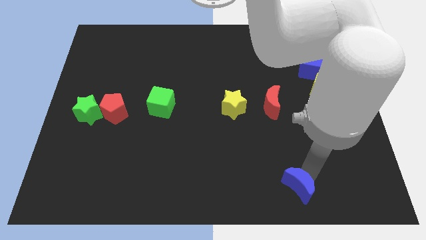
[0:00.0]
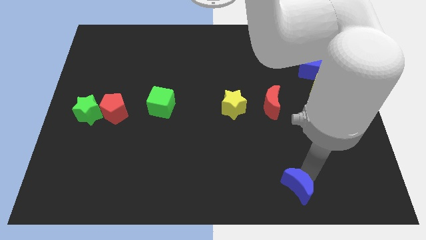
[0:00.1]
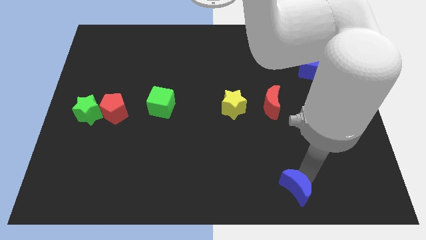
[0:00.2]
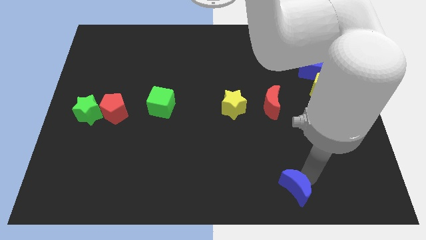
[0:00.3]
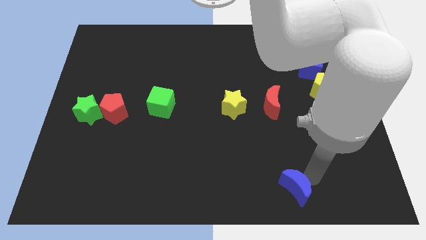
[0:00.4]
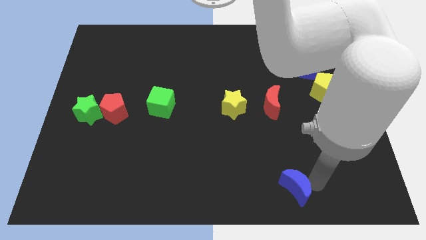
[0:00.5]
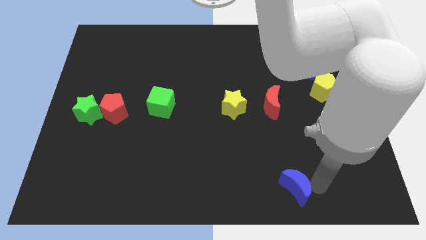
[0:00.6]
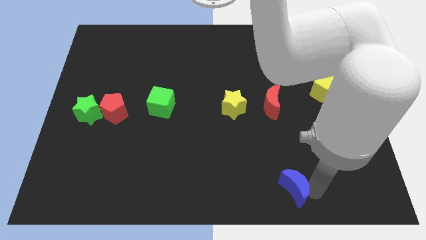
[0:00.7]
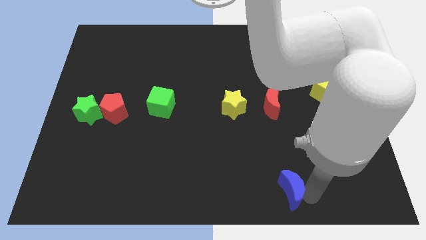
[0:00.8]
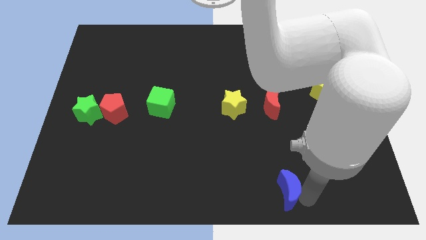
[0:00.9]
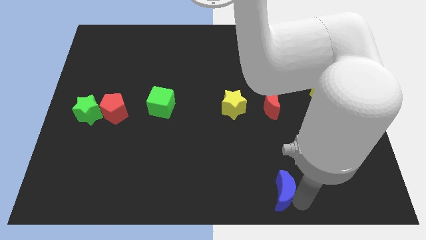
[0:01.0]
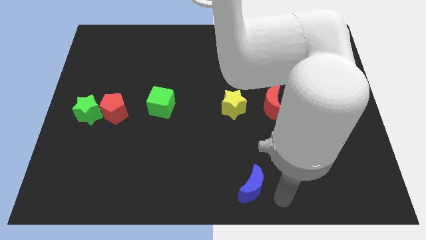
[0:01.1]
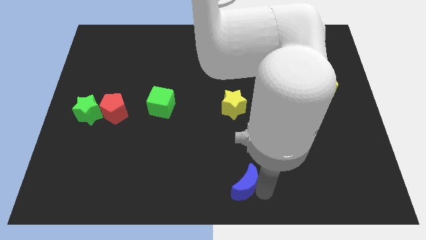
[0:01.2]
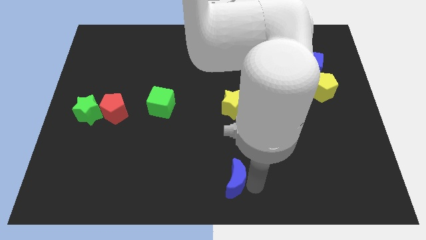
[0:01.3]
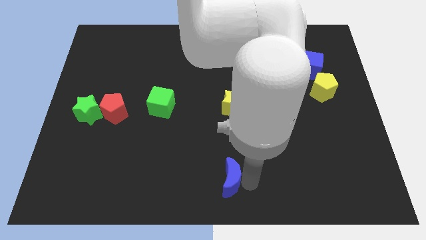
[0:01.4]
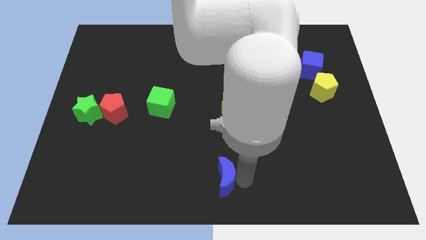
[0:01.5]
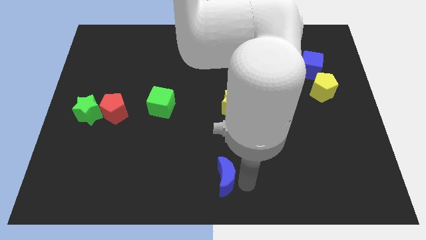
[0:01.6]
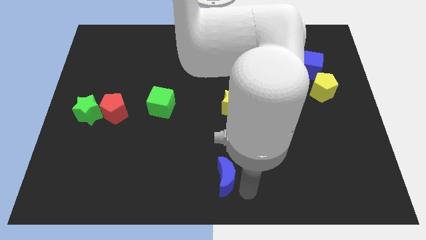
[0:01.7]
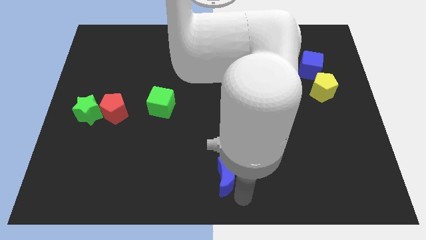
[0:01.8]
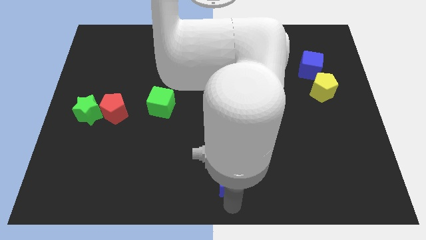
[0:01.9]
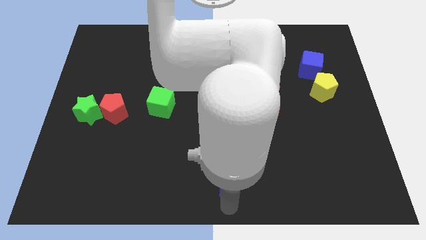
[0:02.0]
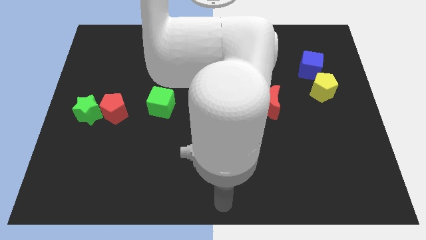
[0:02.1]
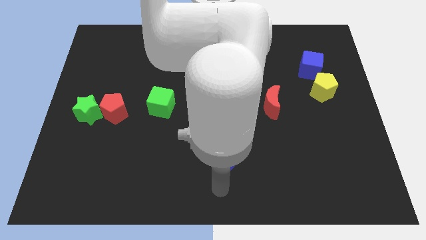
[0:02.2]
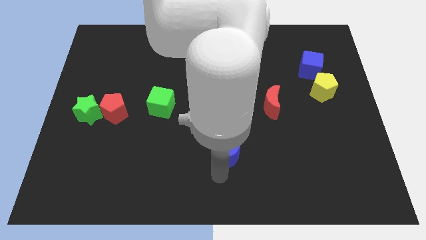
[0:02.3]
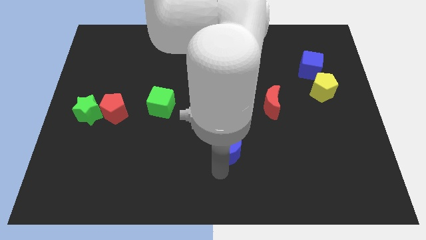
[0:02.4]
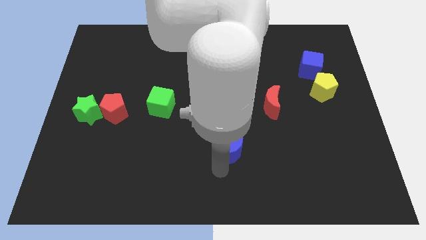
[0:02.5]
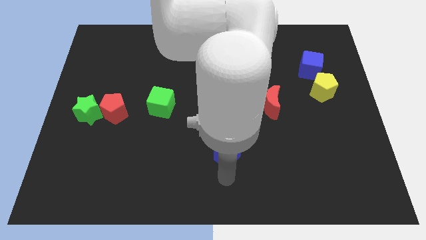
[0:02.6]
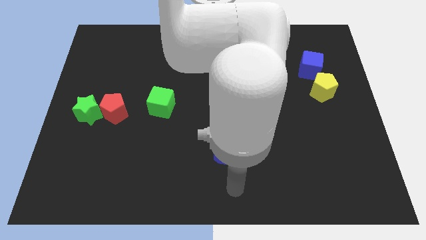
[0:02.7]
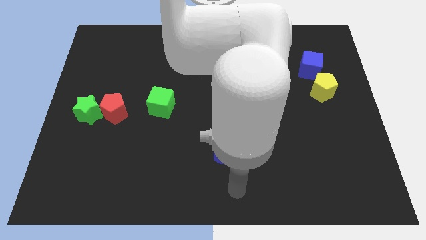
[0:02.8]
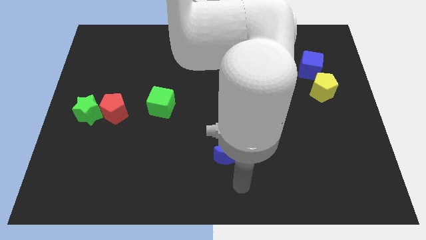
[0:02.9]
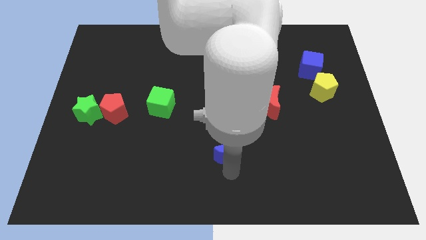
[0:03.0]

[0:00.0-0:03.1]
move the blue moon towards center of the board

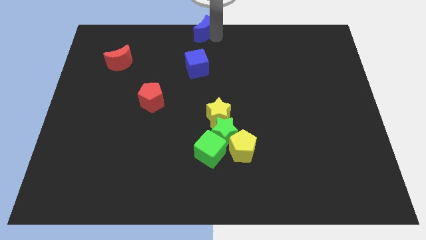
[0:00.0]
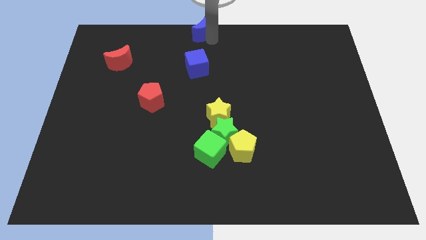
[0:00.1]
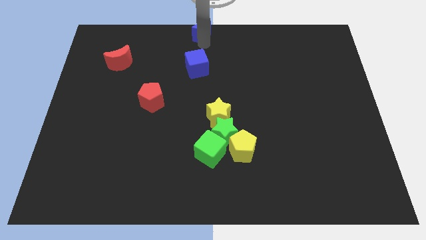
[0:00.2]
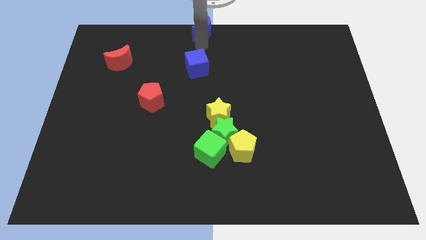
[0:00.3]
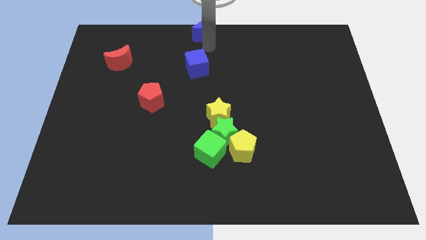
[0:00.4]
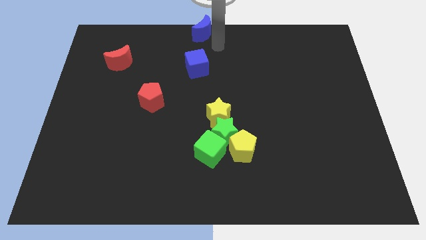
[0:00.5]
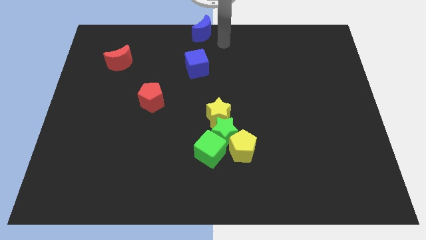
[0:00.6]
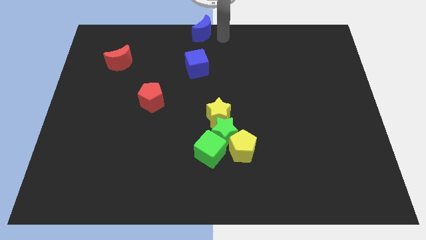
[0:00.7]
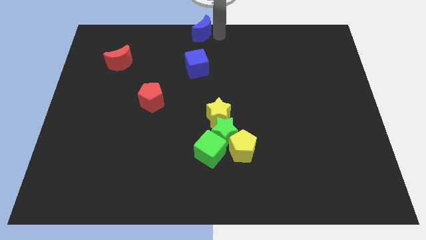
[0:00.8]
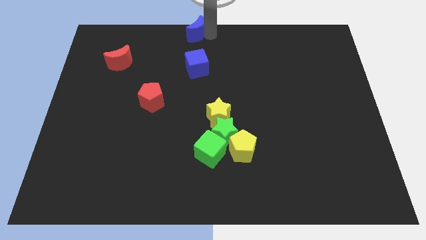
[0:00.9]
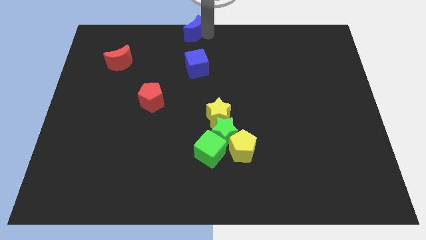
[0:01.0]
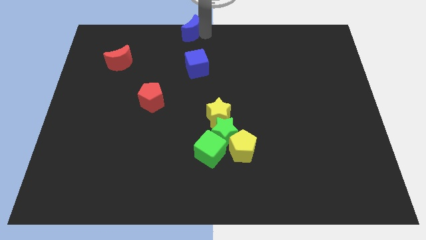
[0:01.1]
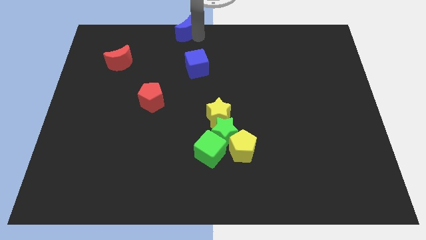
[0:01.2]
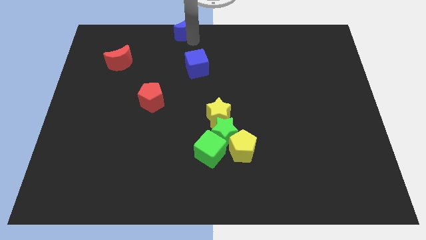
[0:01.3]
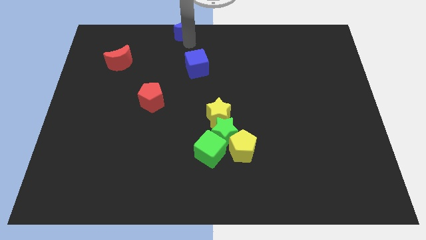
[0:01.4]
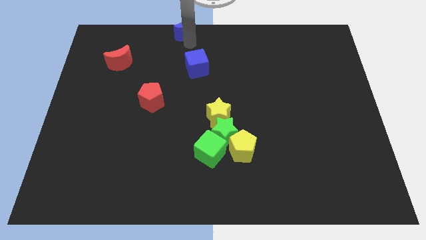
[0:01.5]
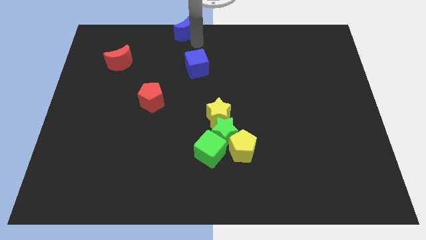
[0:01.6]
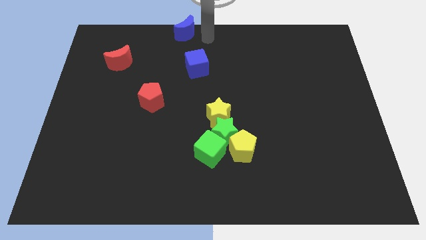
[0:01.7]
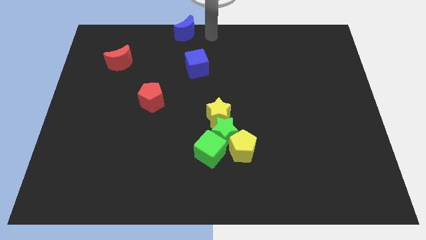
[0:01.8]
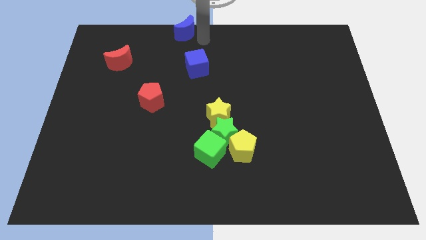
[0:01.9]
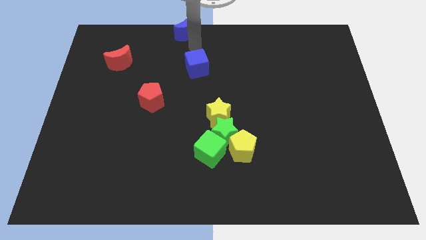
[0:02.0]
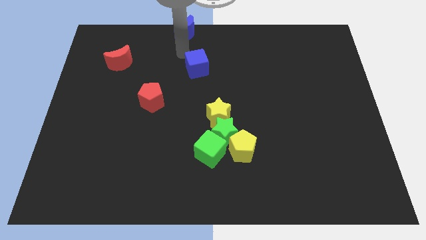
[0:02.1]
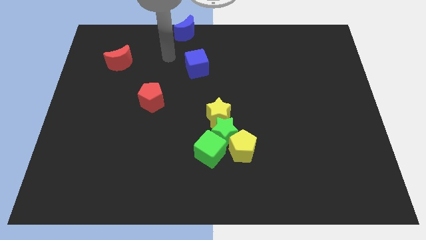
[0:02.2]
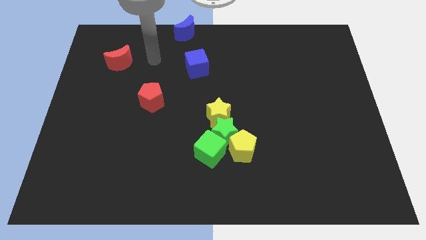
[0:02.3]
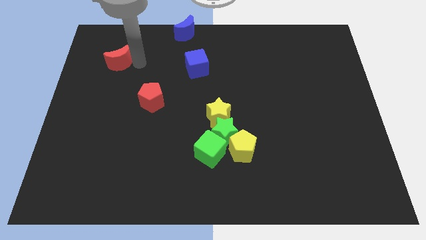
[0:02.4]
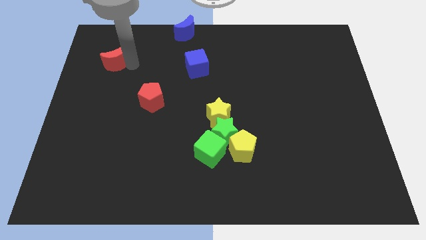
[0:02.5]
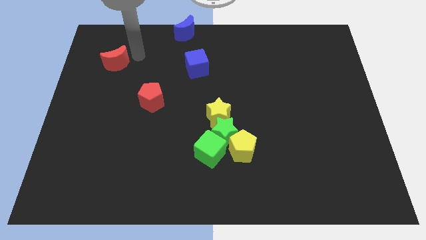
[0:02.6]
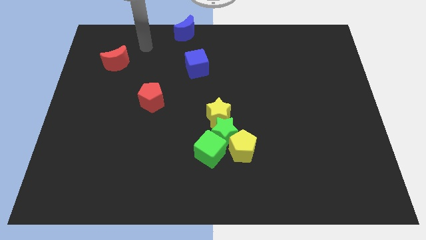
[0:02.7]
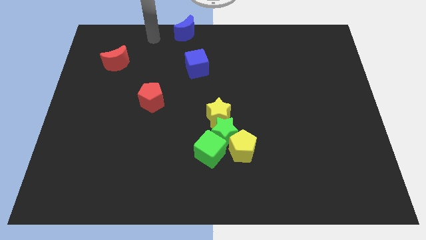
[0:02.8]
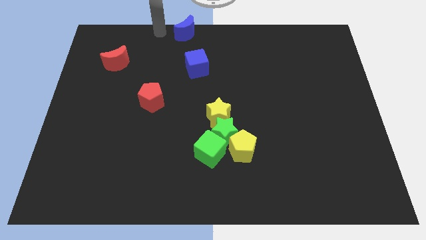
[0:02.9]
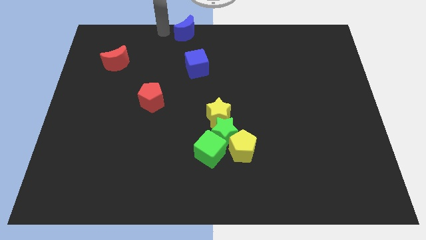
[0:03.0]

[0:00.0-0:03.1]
push the blue moon and red moon to the on the right side of board

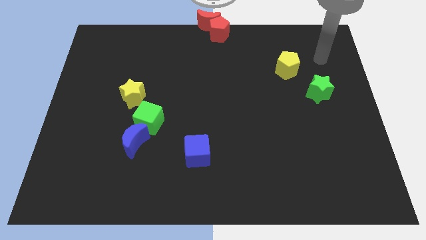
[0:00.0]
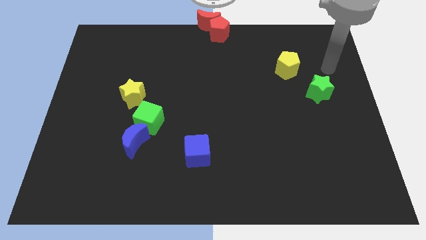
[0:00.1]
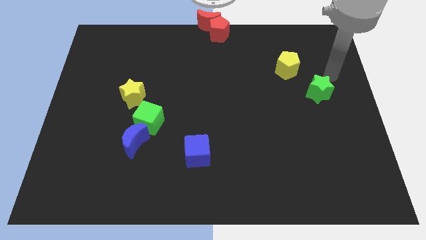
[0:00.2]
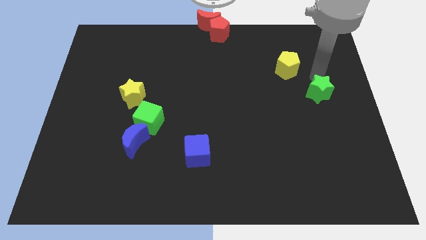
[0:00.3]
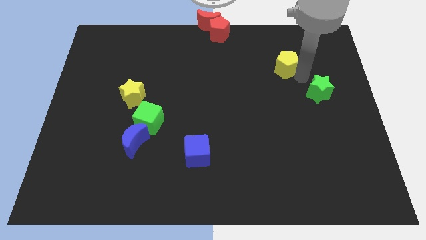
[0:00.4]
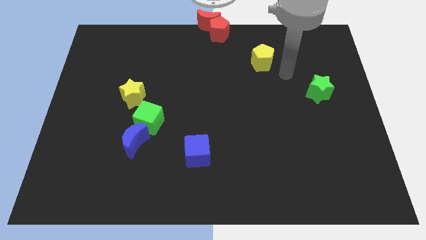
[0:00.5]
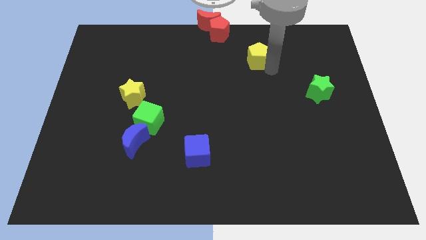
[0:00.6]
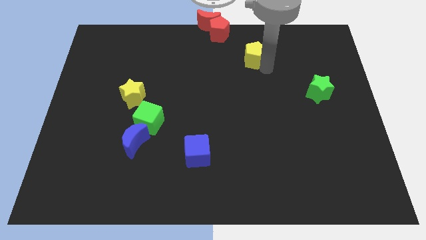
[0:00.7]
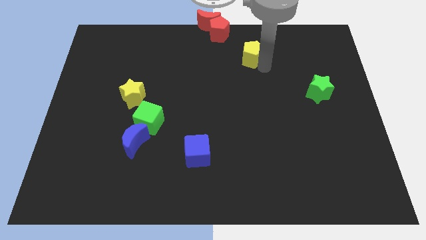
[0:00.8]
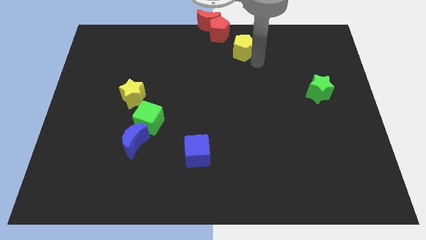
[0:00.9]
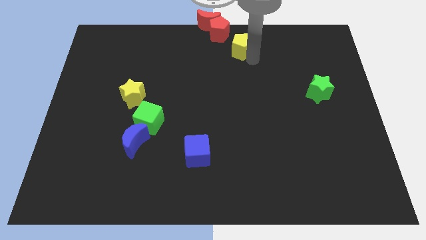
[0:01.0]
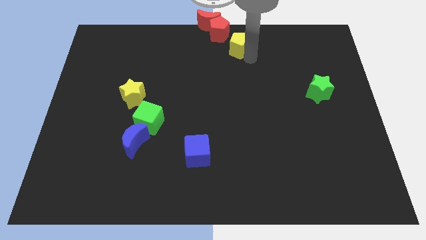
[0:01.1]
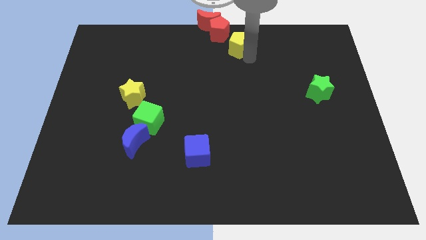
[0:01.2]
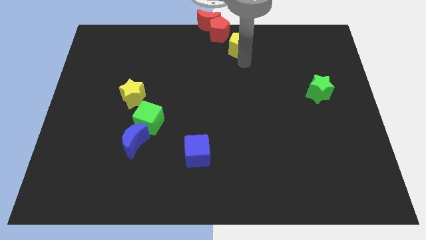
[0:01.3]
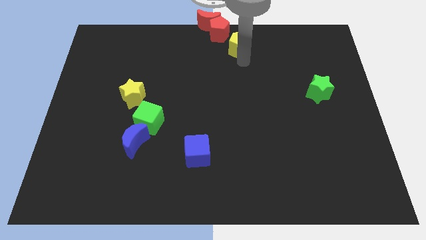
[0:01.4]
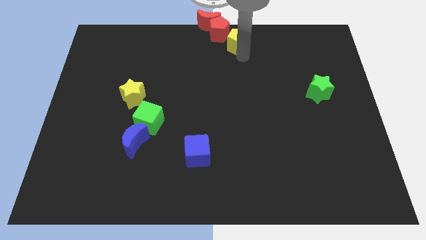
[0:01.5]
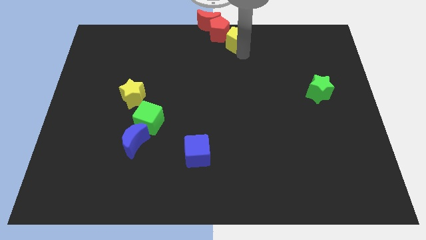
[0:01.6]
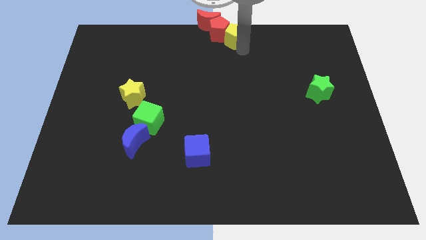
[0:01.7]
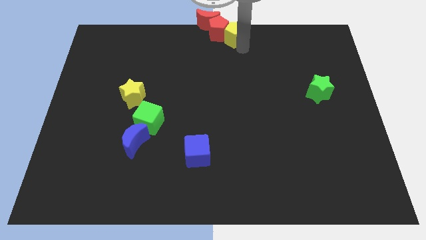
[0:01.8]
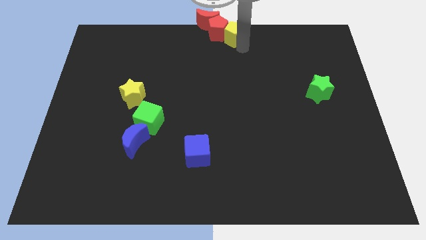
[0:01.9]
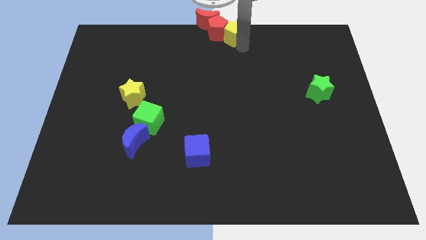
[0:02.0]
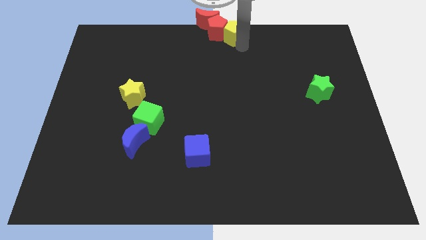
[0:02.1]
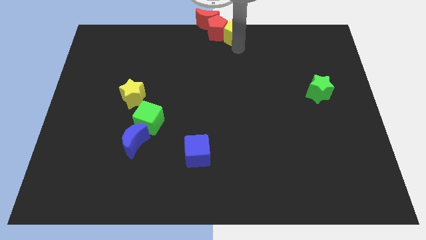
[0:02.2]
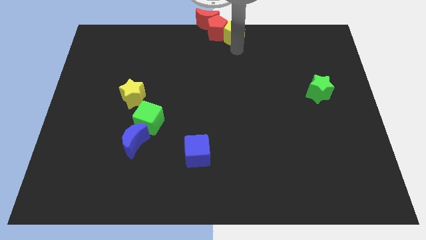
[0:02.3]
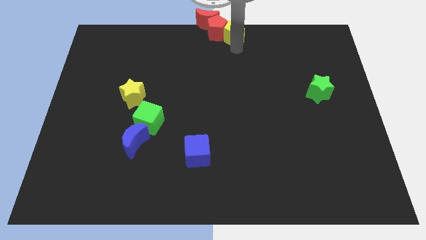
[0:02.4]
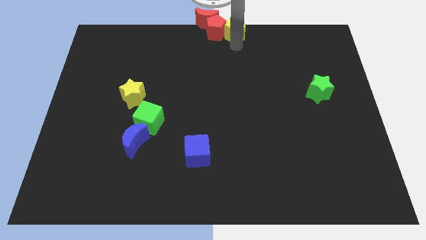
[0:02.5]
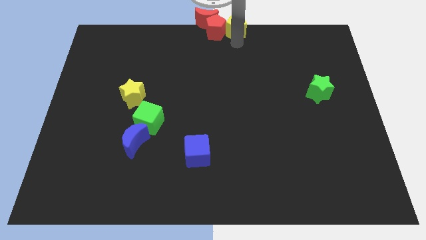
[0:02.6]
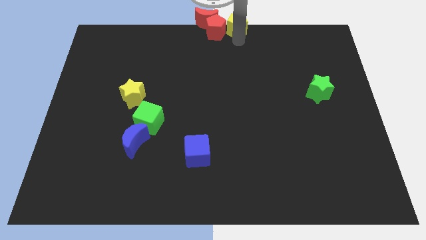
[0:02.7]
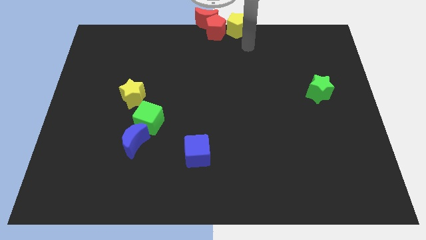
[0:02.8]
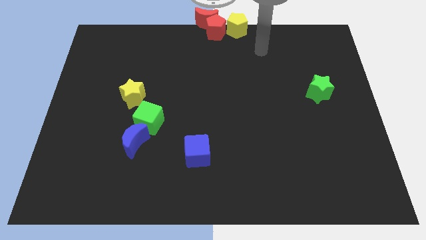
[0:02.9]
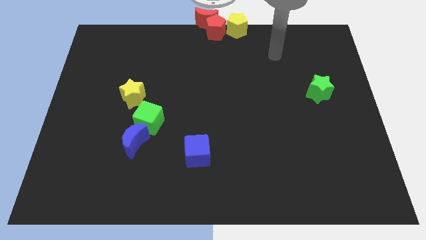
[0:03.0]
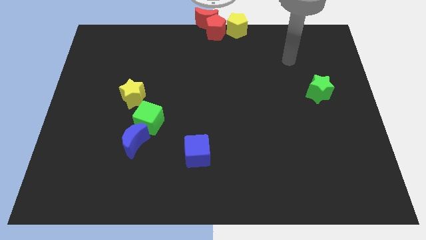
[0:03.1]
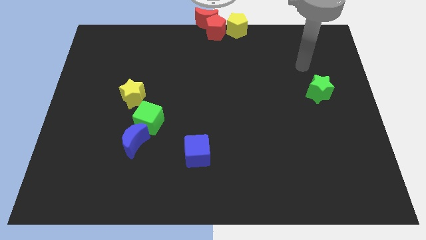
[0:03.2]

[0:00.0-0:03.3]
move the yellow pentagon to the right side of the red red pentagon
